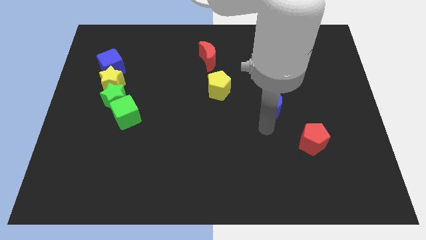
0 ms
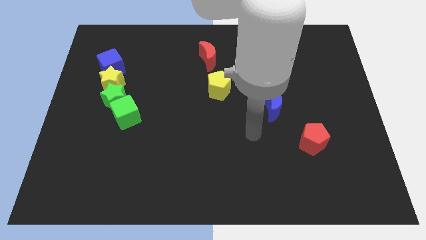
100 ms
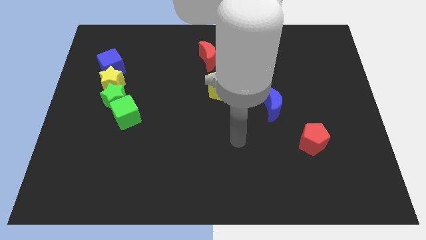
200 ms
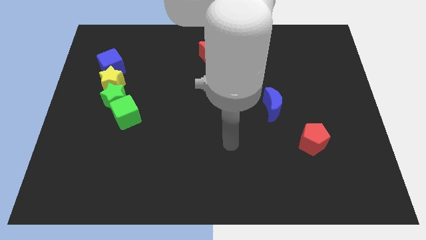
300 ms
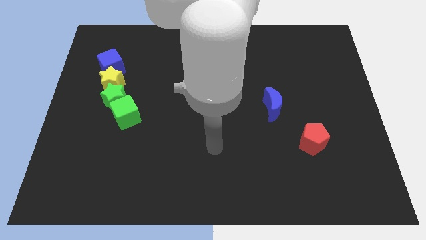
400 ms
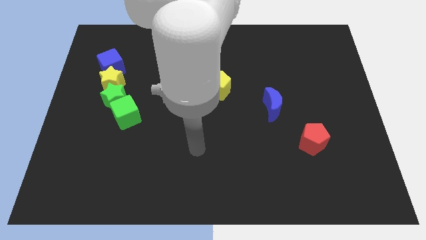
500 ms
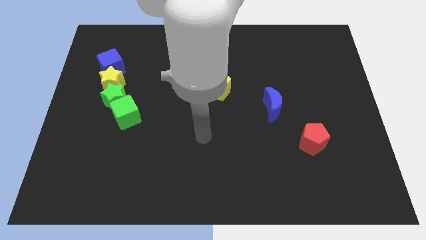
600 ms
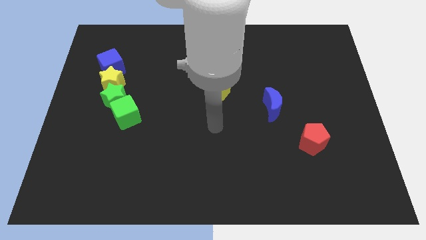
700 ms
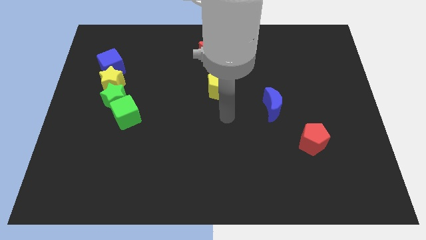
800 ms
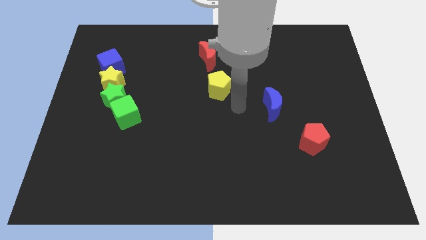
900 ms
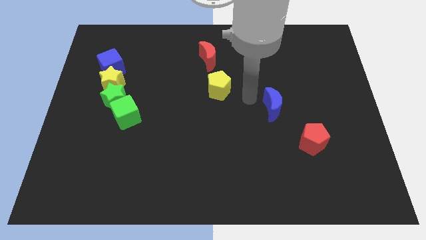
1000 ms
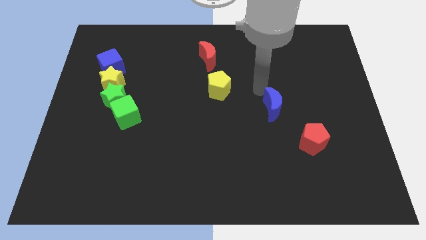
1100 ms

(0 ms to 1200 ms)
go near the blue moon

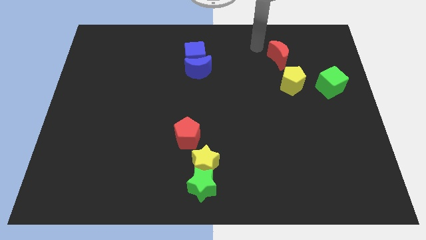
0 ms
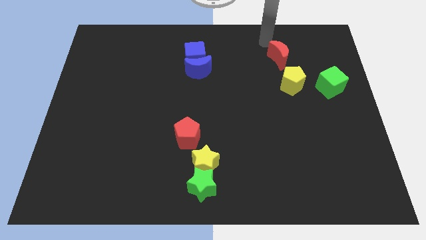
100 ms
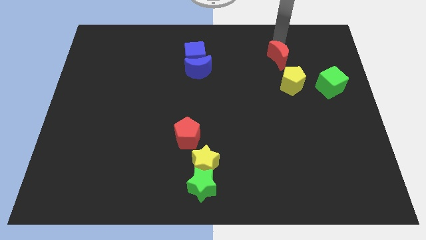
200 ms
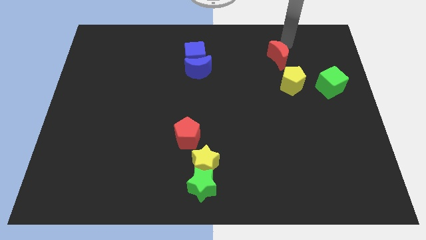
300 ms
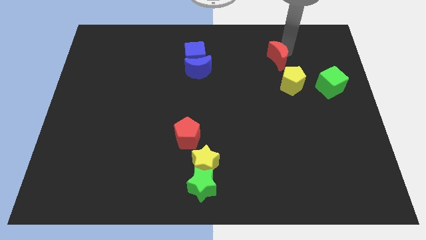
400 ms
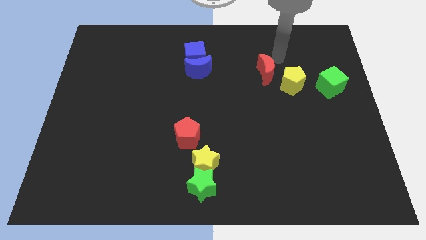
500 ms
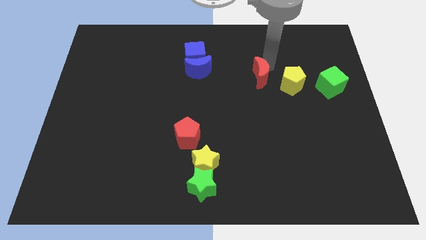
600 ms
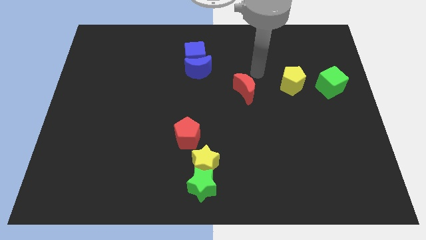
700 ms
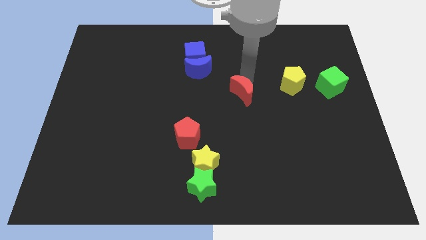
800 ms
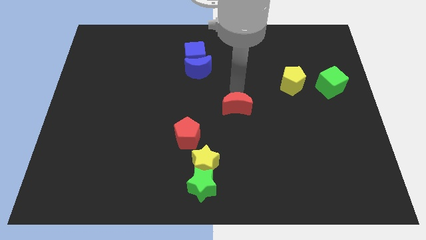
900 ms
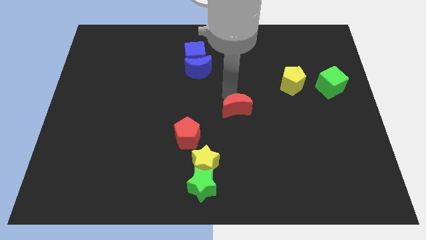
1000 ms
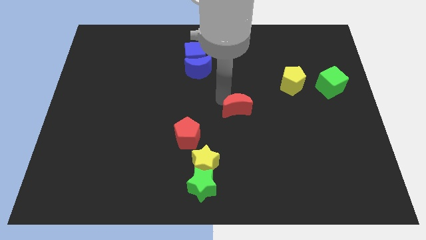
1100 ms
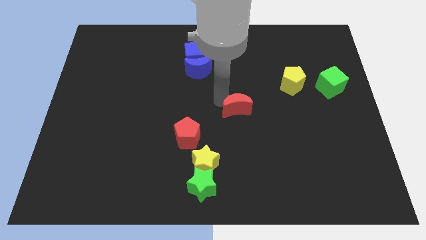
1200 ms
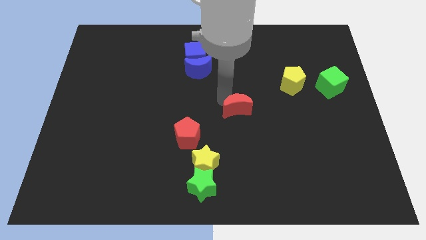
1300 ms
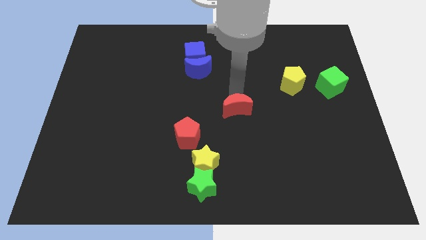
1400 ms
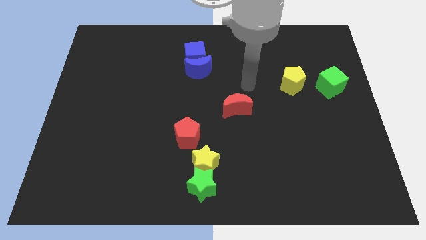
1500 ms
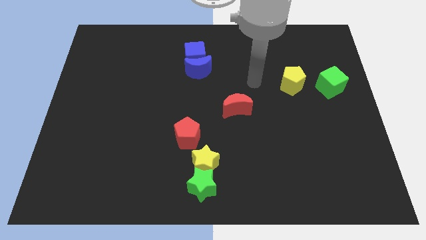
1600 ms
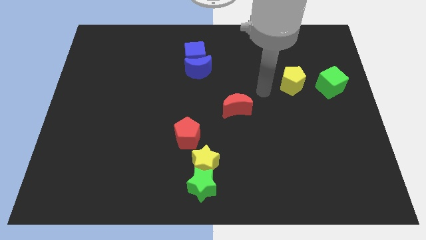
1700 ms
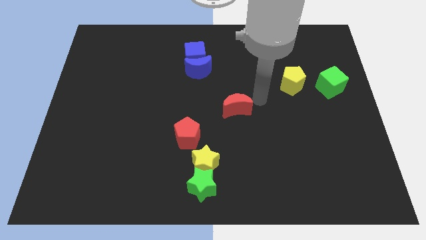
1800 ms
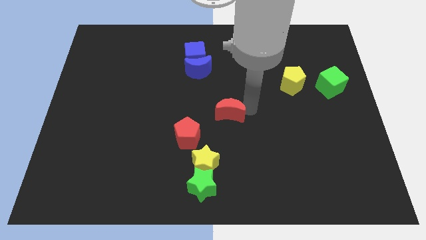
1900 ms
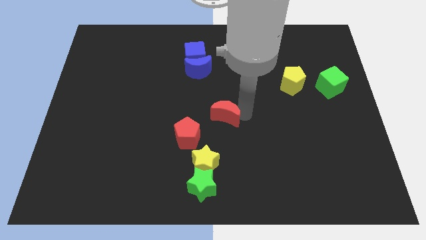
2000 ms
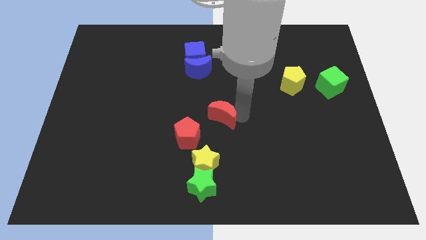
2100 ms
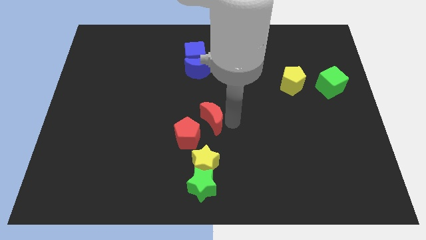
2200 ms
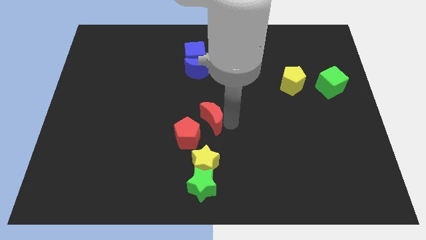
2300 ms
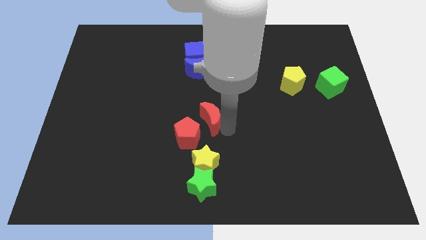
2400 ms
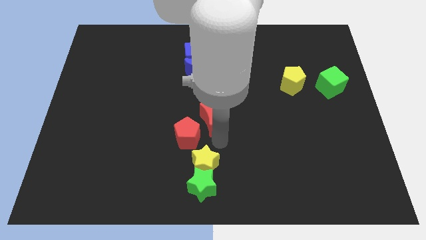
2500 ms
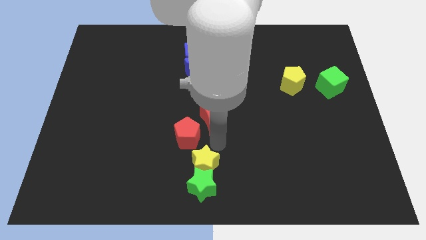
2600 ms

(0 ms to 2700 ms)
place red crescent below blue crescent

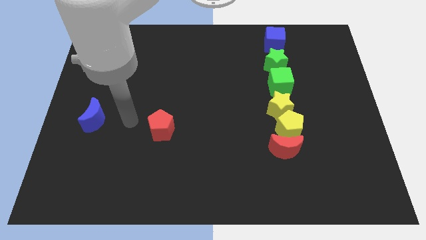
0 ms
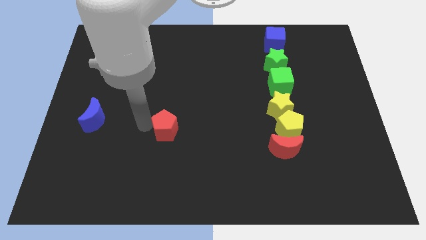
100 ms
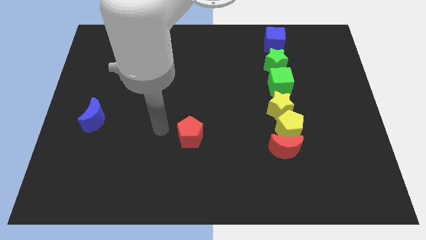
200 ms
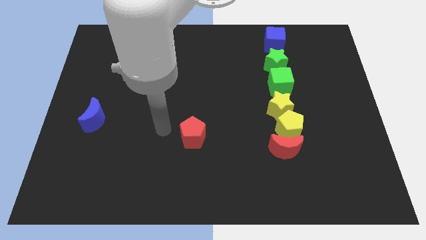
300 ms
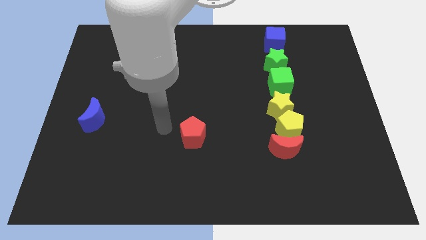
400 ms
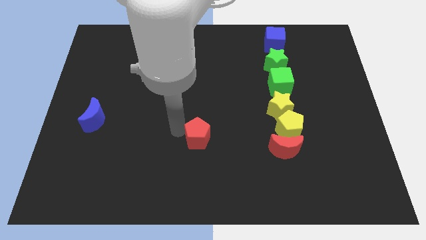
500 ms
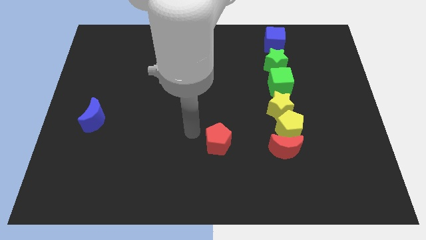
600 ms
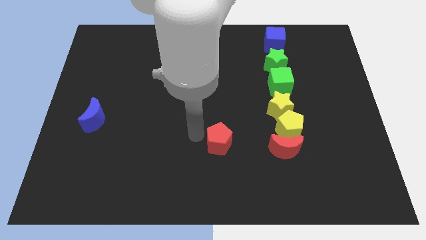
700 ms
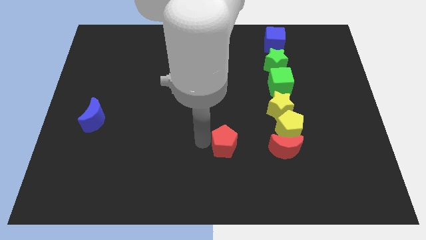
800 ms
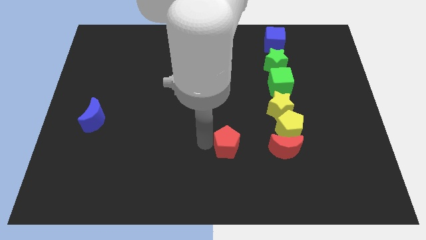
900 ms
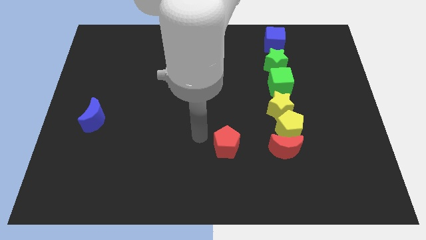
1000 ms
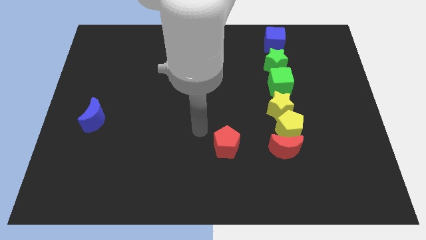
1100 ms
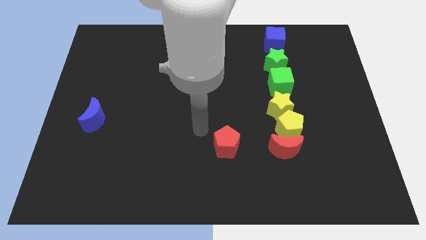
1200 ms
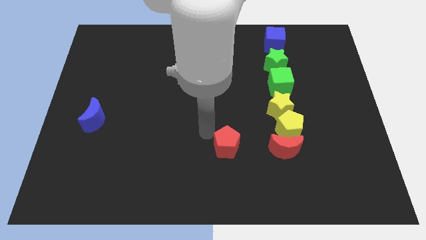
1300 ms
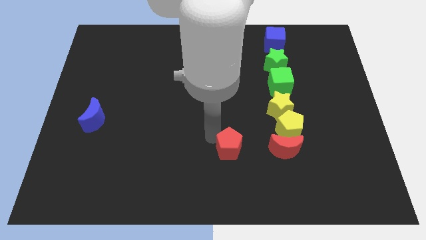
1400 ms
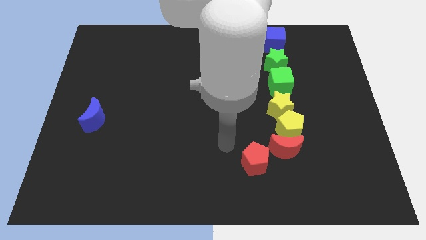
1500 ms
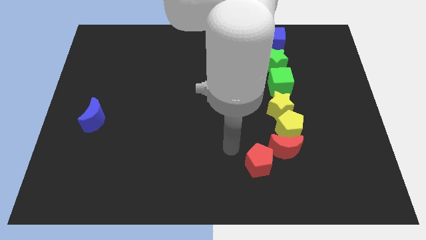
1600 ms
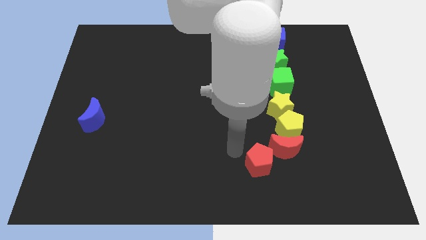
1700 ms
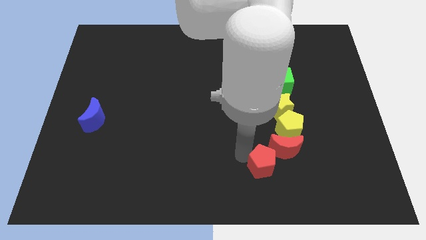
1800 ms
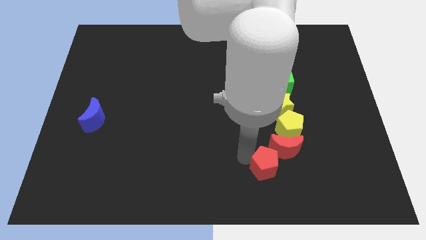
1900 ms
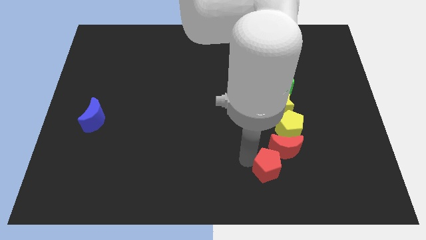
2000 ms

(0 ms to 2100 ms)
push the red pentagon diagonal down left to the red moon

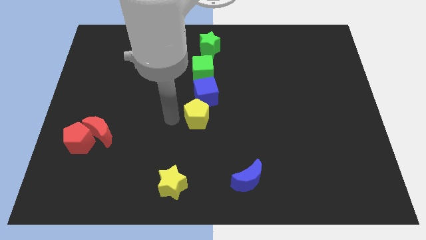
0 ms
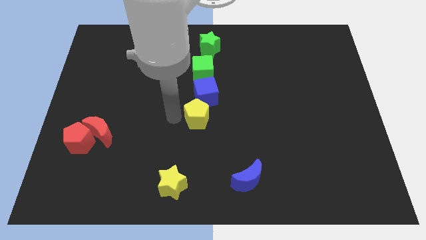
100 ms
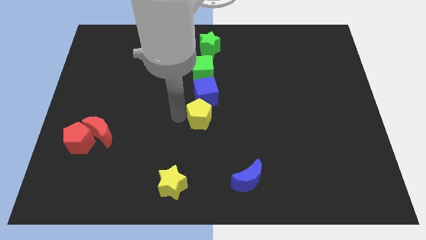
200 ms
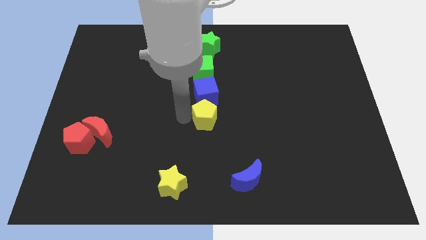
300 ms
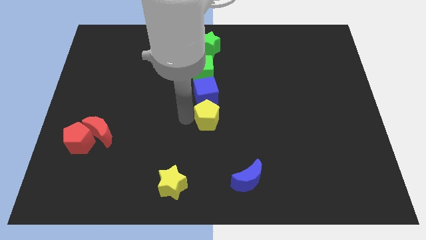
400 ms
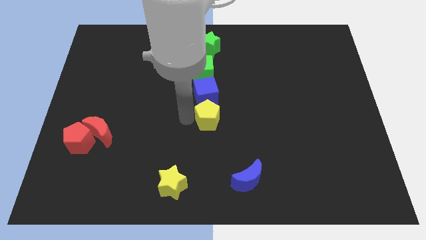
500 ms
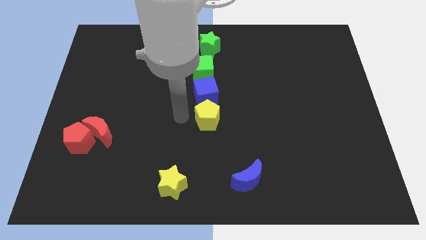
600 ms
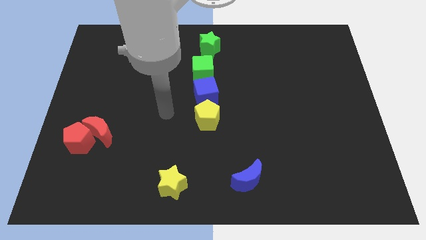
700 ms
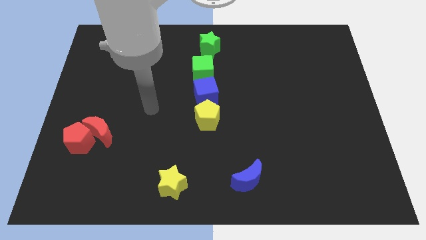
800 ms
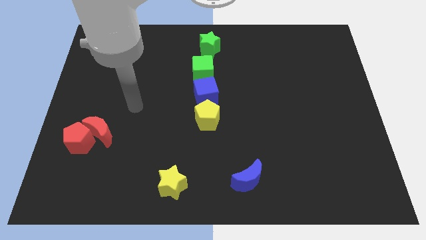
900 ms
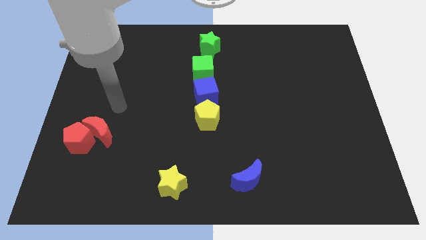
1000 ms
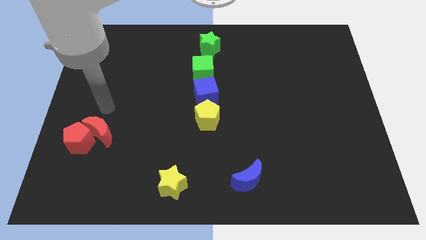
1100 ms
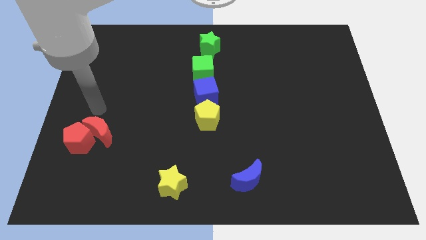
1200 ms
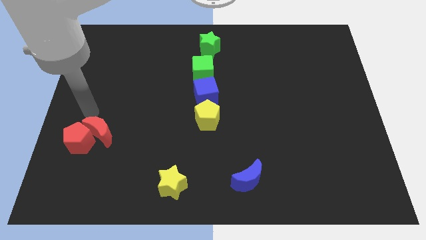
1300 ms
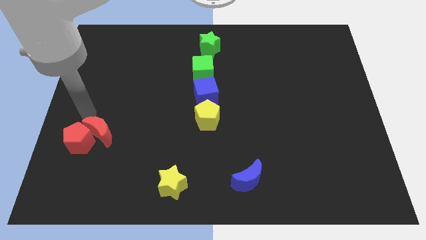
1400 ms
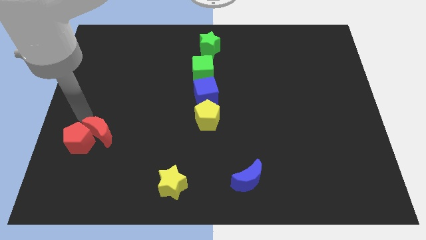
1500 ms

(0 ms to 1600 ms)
move your arm away from the yellow pentagon

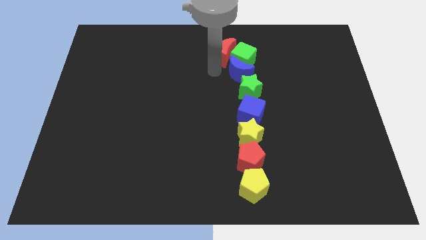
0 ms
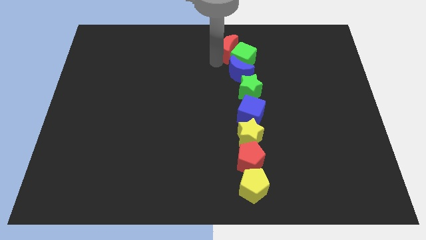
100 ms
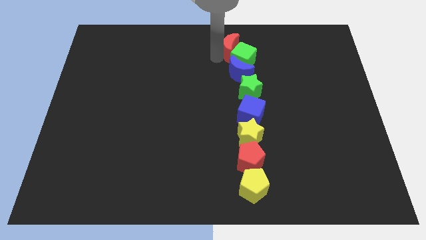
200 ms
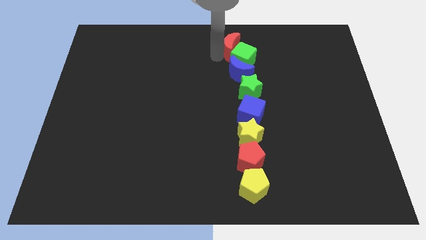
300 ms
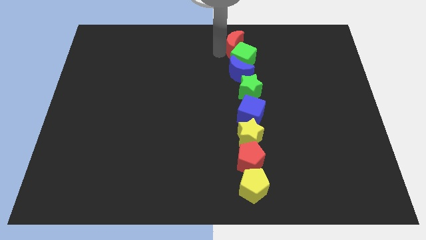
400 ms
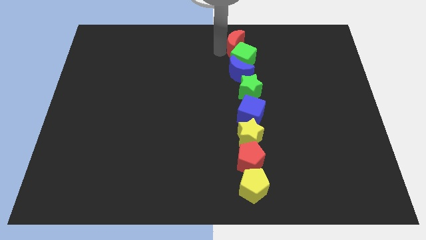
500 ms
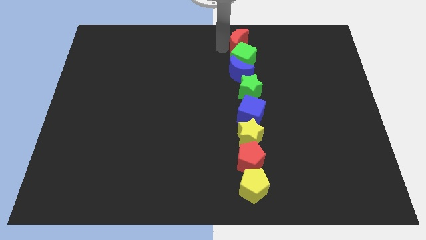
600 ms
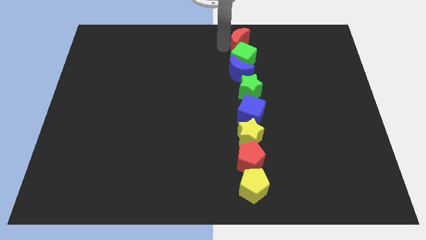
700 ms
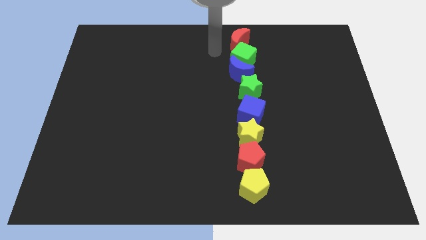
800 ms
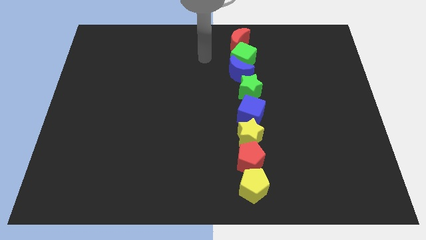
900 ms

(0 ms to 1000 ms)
put the red moon above the green cube

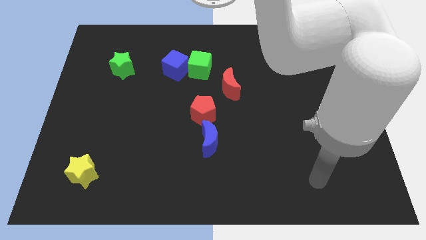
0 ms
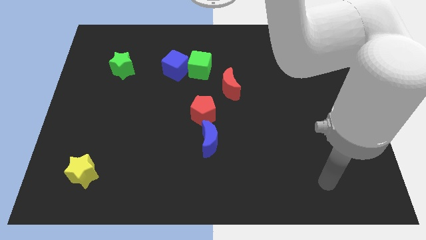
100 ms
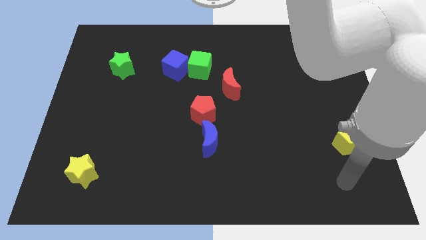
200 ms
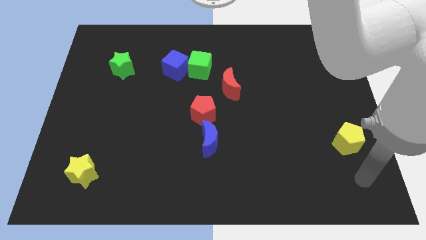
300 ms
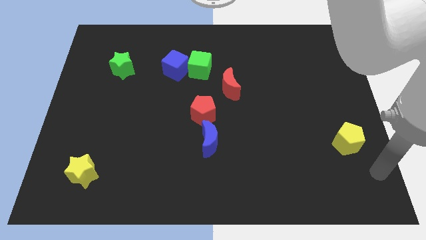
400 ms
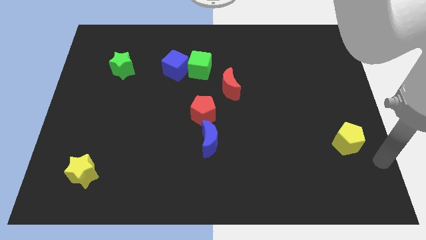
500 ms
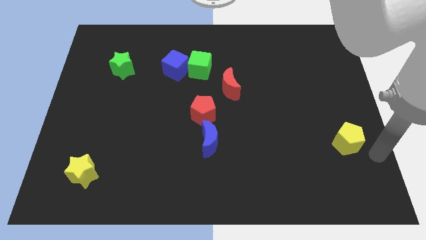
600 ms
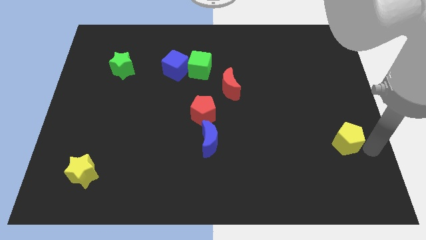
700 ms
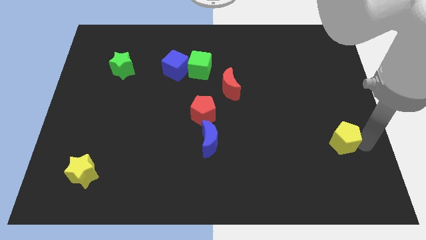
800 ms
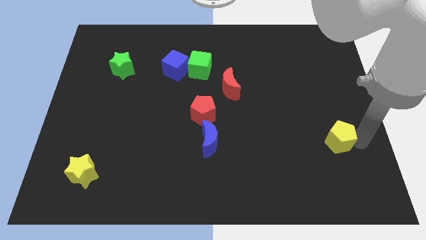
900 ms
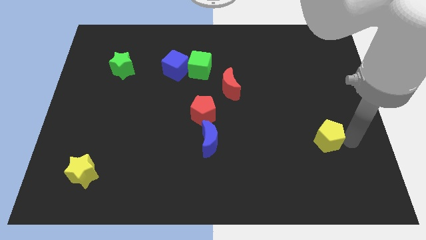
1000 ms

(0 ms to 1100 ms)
place your arm to the right of the yellow pentagon
